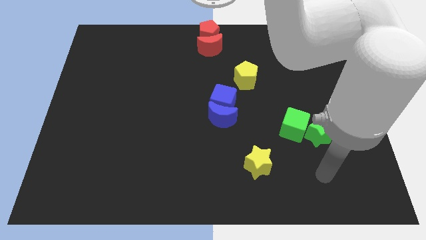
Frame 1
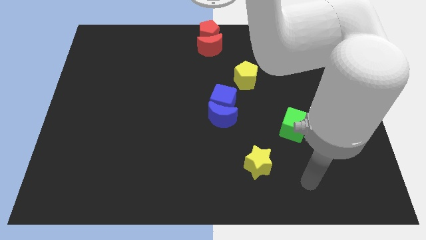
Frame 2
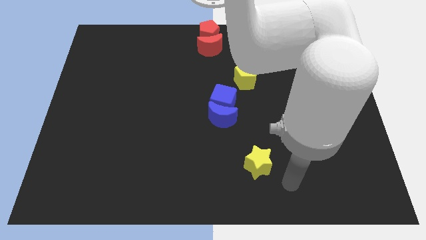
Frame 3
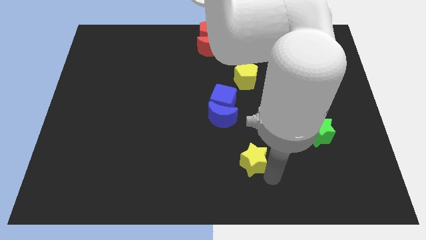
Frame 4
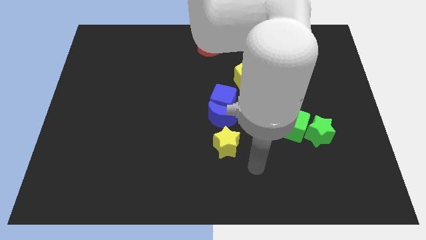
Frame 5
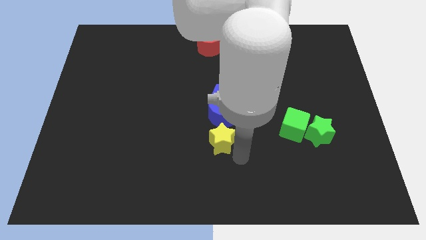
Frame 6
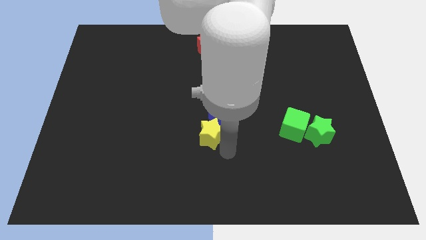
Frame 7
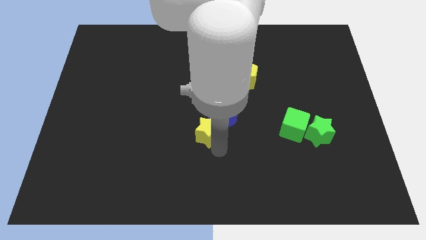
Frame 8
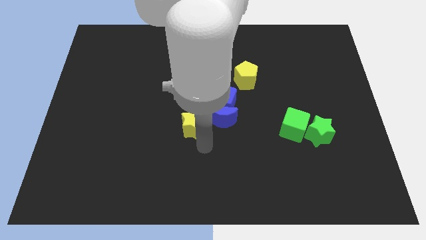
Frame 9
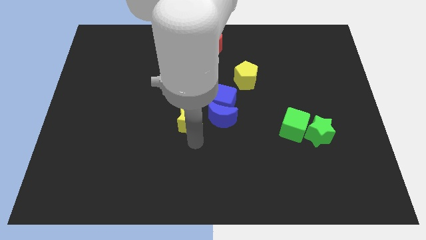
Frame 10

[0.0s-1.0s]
slide the yellow pentagon towards the center

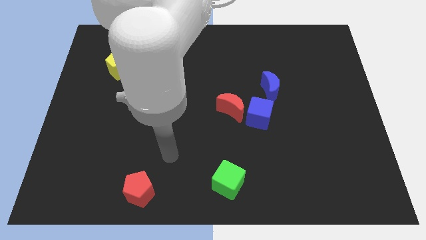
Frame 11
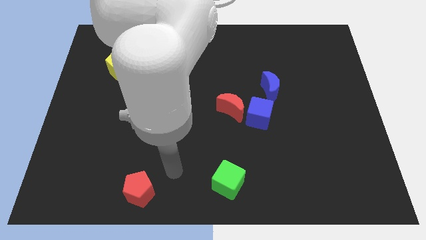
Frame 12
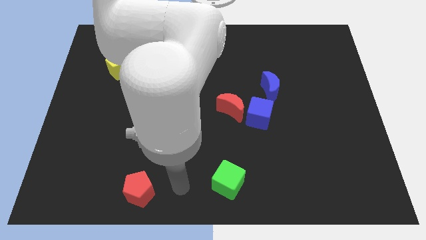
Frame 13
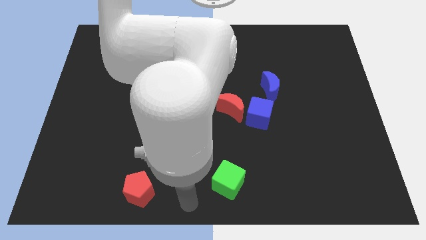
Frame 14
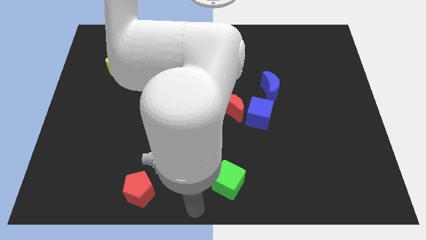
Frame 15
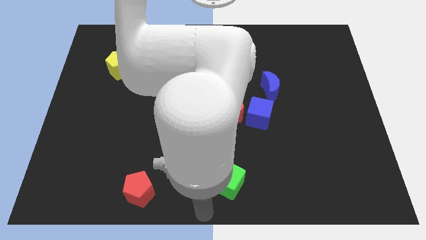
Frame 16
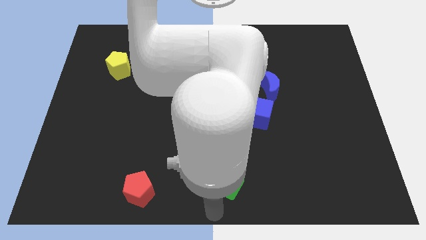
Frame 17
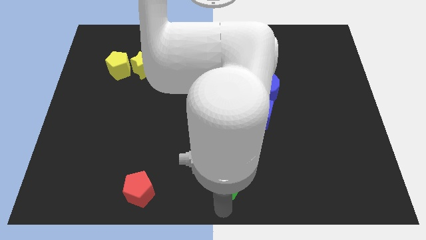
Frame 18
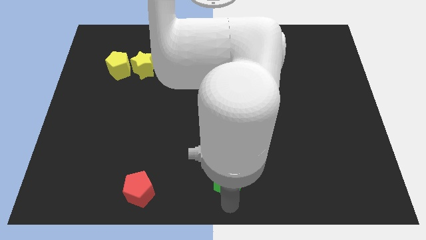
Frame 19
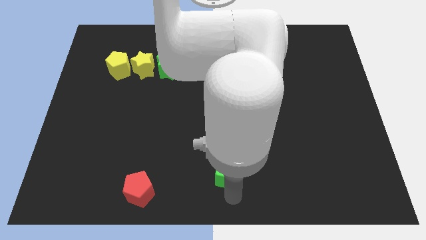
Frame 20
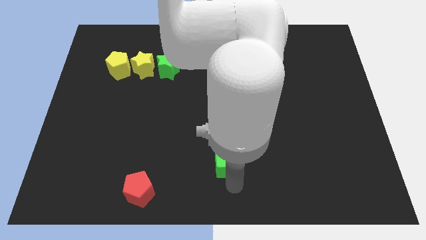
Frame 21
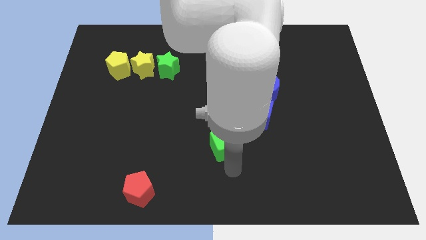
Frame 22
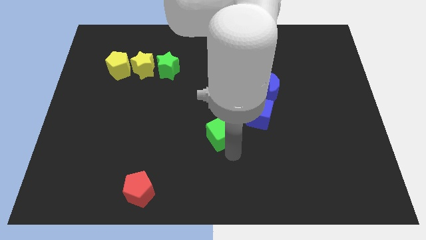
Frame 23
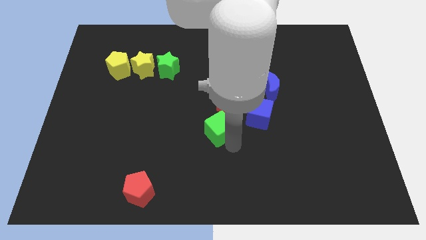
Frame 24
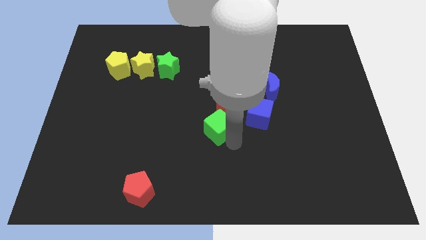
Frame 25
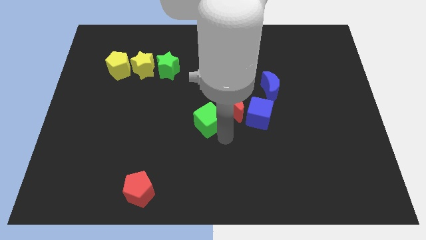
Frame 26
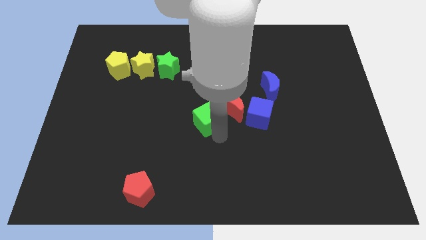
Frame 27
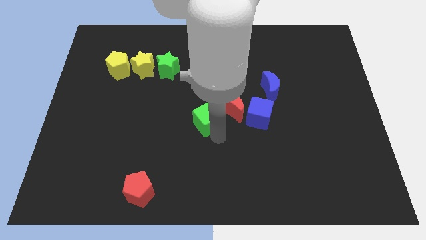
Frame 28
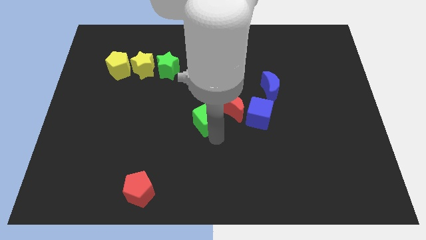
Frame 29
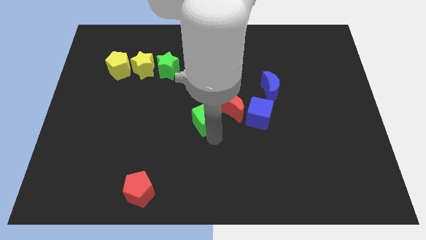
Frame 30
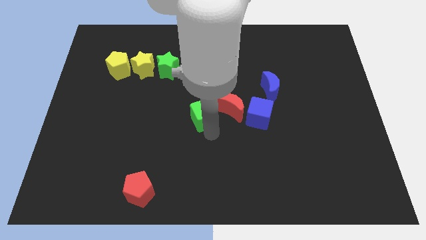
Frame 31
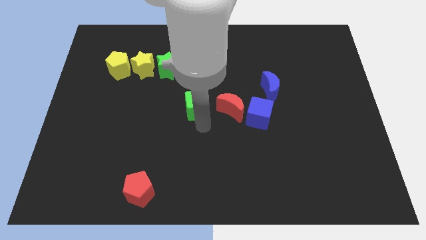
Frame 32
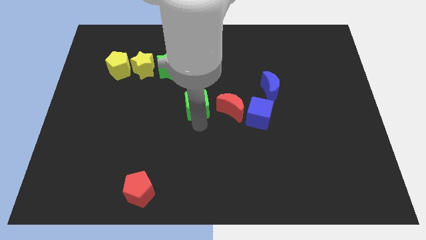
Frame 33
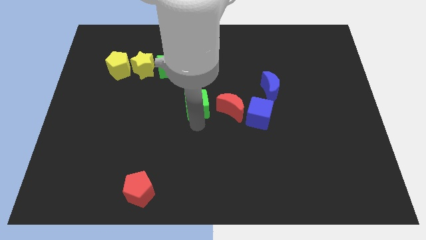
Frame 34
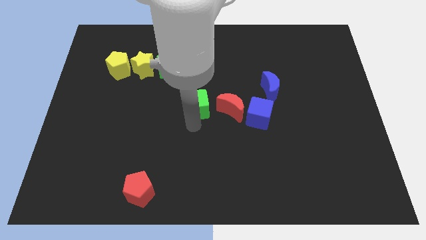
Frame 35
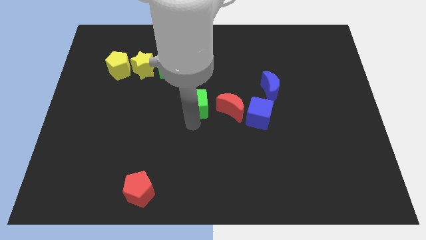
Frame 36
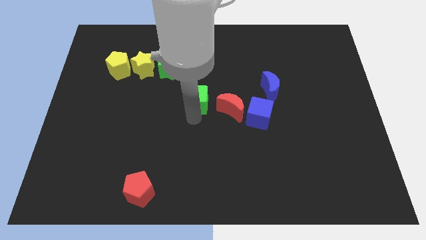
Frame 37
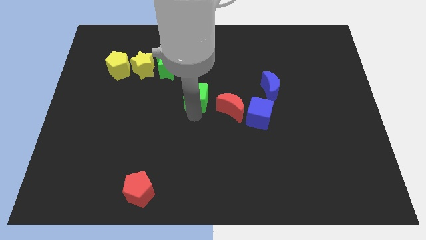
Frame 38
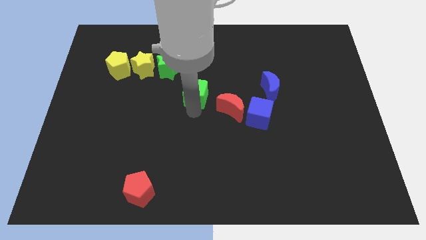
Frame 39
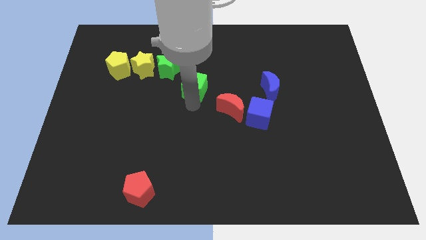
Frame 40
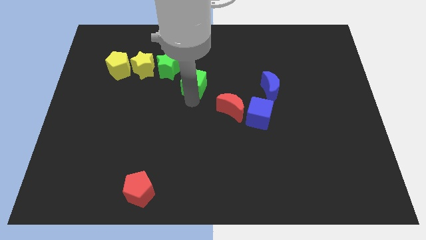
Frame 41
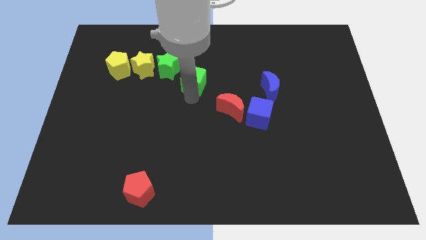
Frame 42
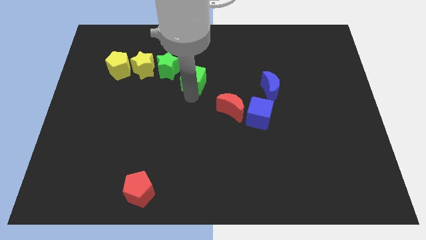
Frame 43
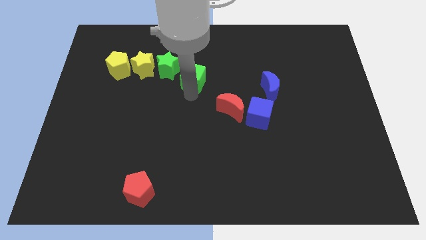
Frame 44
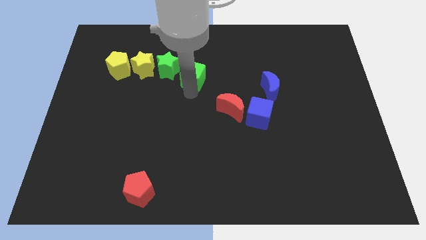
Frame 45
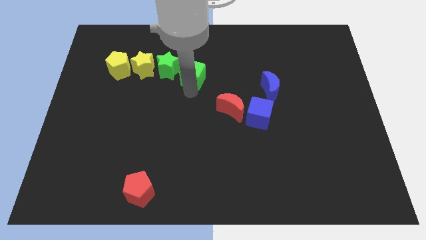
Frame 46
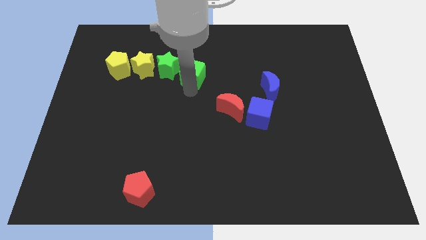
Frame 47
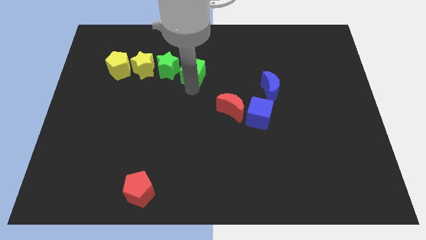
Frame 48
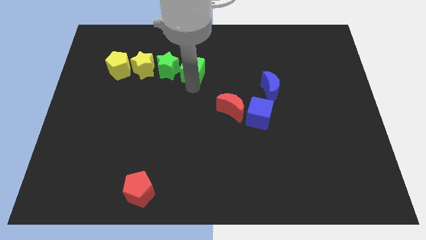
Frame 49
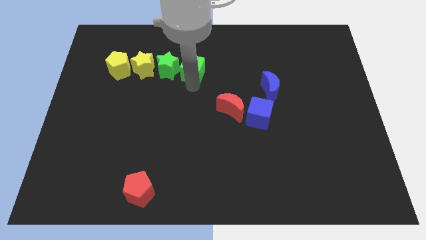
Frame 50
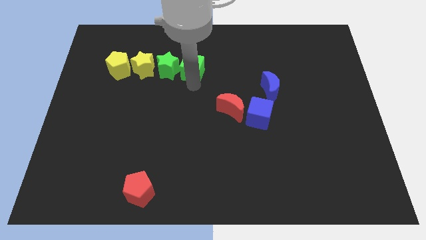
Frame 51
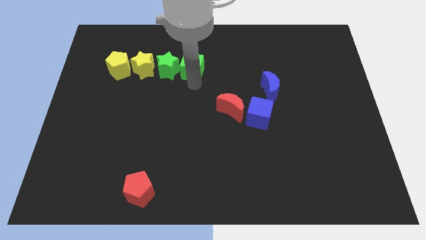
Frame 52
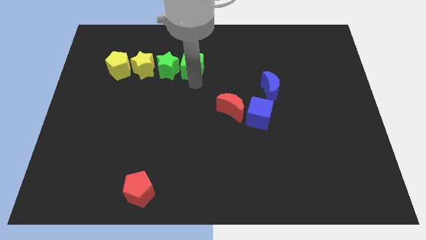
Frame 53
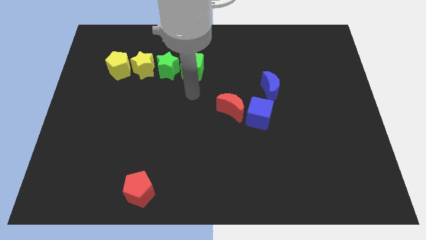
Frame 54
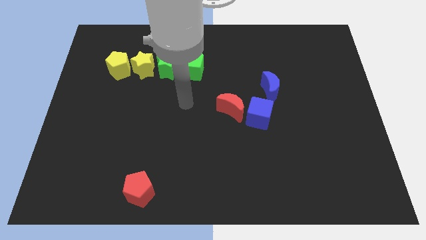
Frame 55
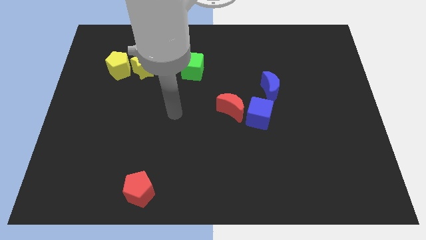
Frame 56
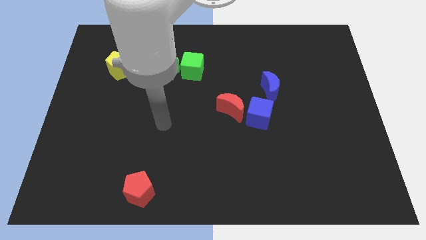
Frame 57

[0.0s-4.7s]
push the green cube right to the green star

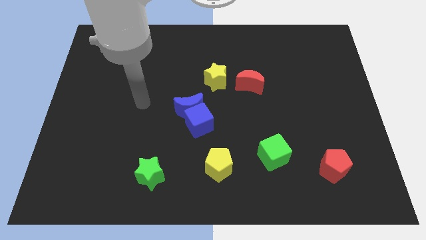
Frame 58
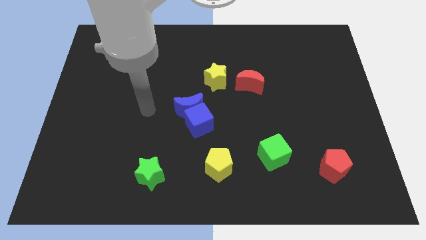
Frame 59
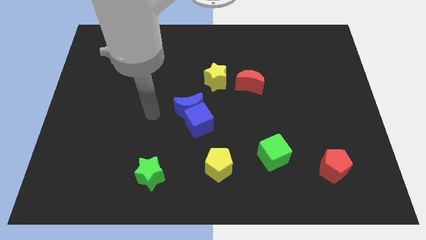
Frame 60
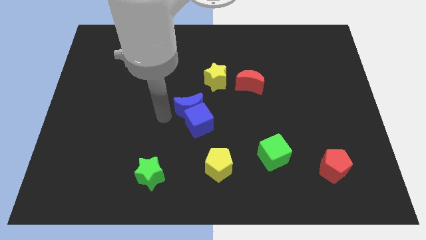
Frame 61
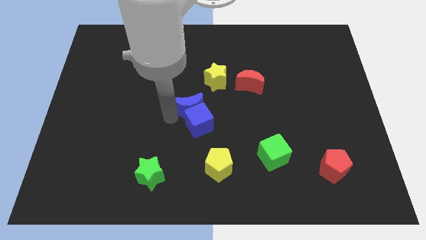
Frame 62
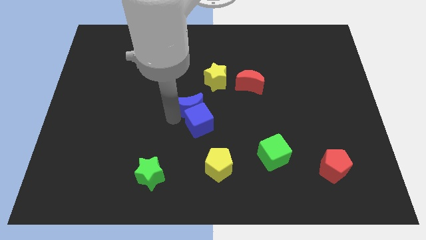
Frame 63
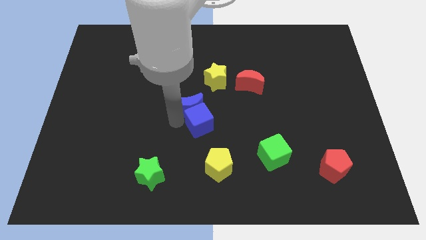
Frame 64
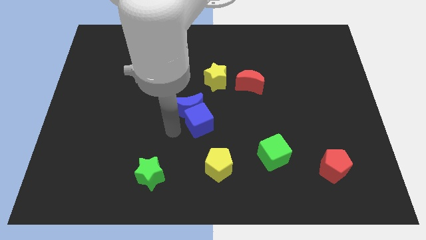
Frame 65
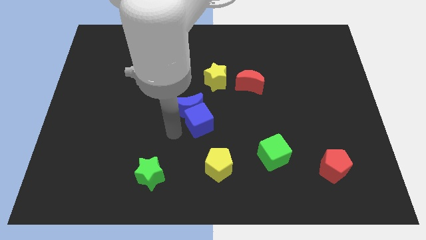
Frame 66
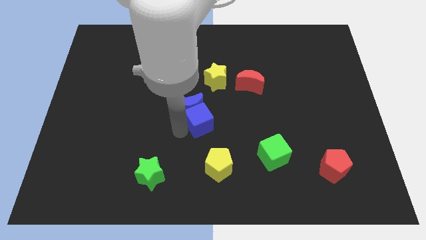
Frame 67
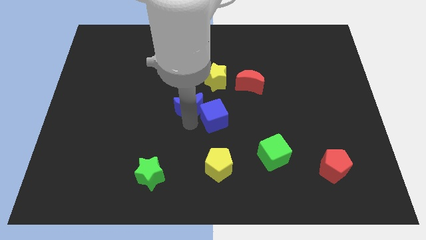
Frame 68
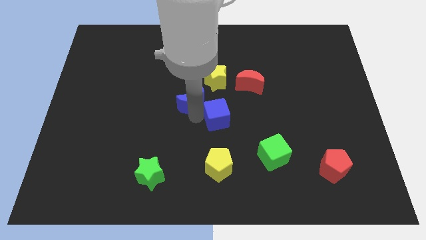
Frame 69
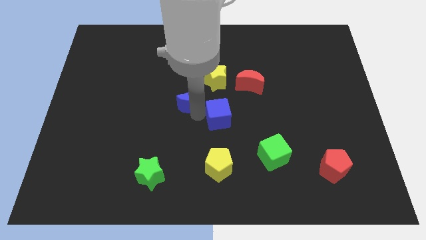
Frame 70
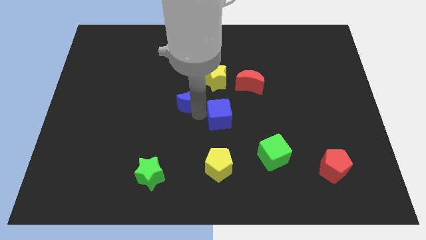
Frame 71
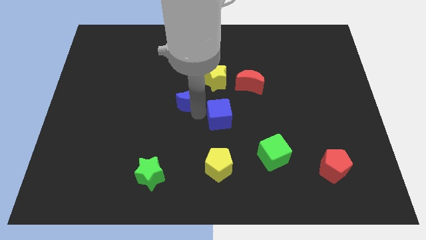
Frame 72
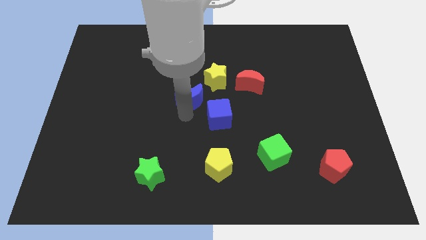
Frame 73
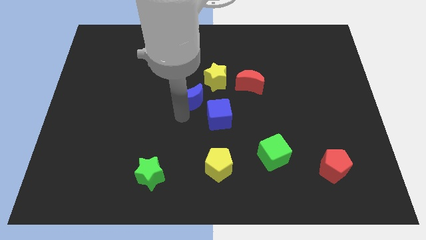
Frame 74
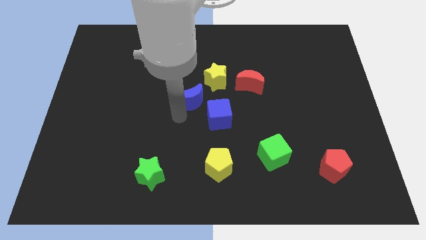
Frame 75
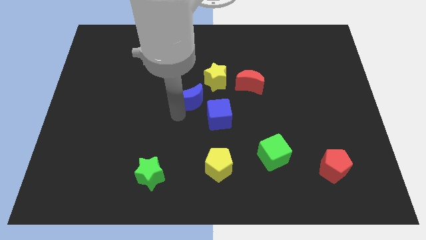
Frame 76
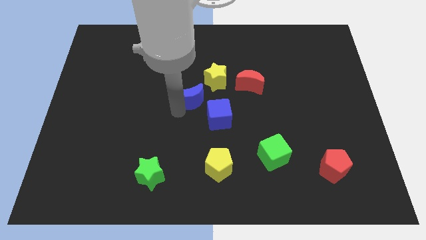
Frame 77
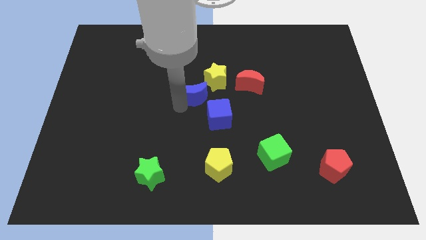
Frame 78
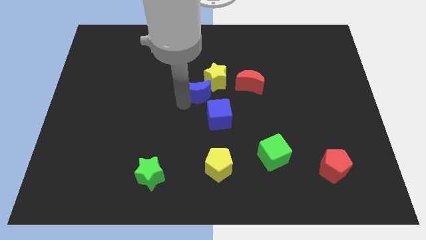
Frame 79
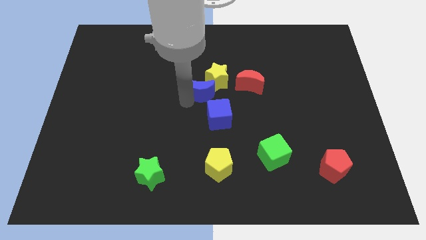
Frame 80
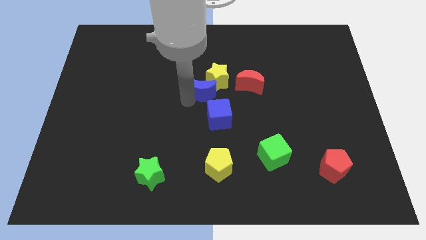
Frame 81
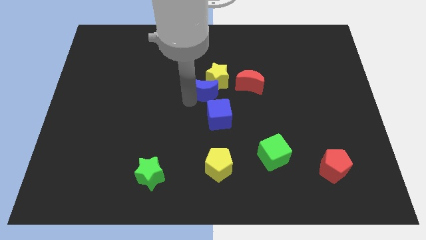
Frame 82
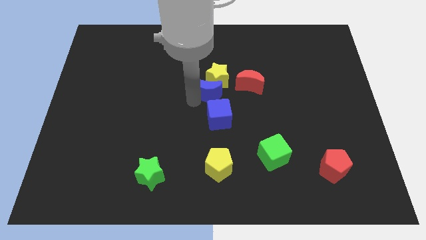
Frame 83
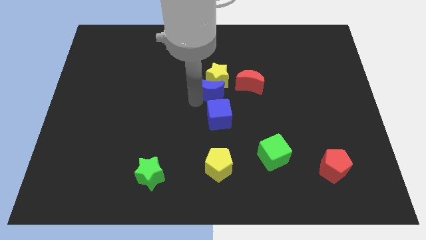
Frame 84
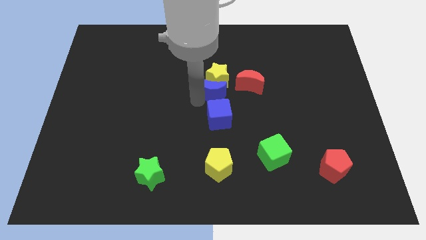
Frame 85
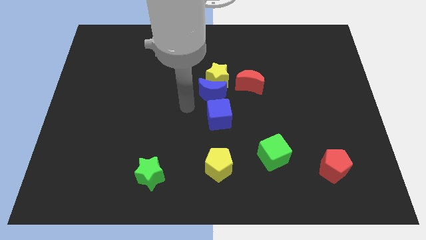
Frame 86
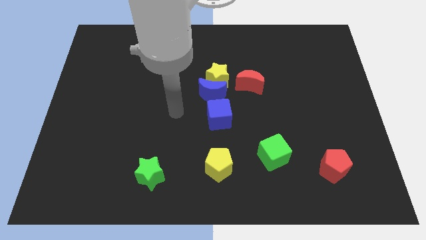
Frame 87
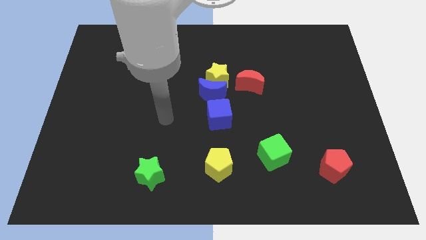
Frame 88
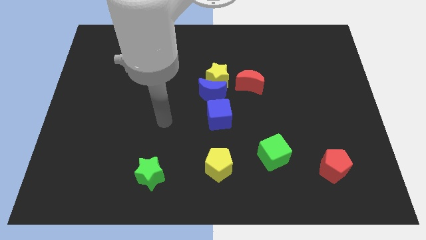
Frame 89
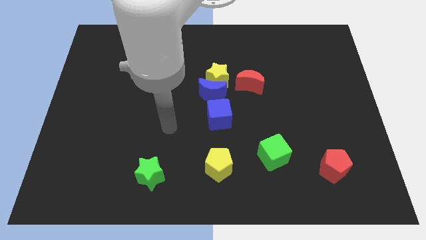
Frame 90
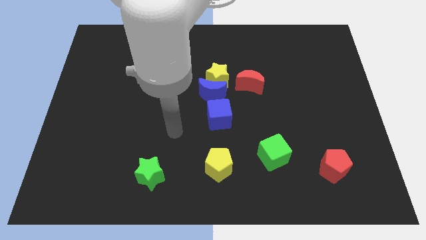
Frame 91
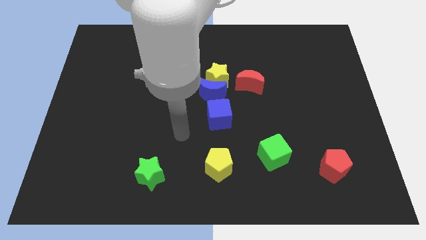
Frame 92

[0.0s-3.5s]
push the blue crescent into the blue cube

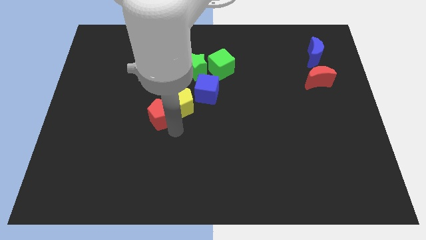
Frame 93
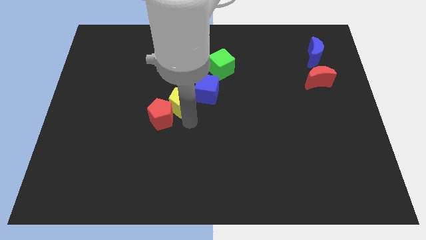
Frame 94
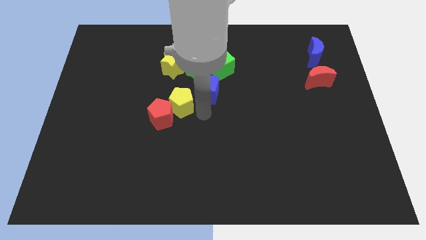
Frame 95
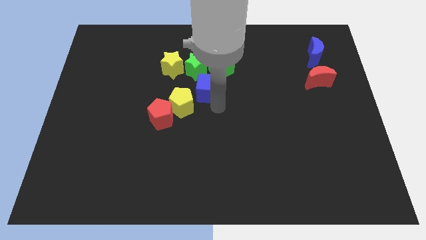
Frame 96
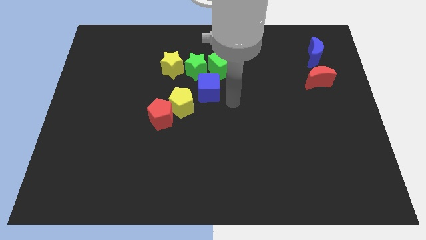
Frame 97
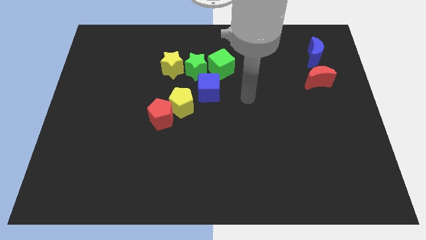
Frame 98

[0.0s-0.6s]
slightly touch the blue cube
